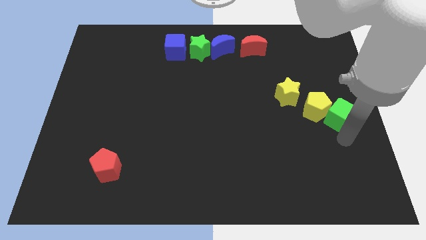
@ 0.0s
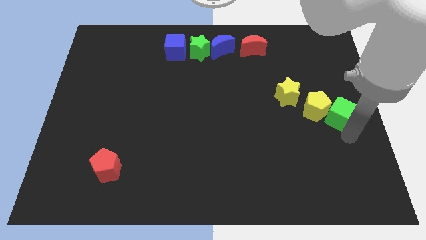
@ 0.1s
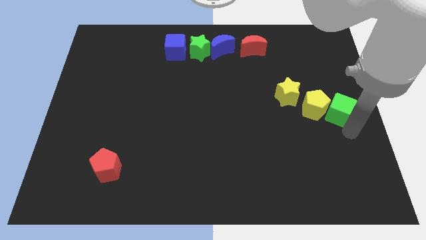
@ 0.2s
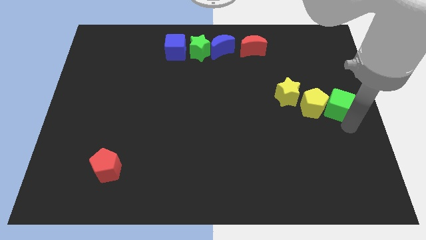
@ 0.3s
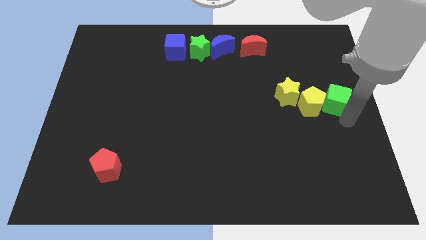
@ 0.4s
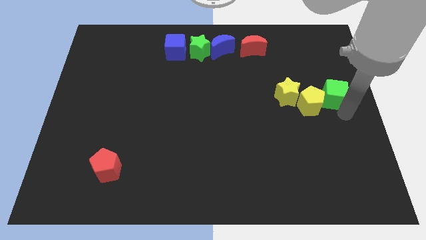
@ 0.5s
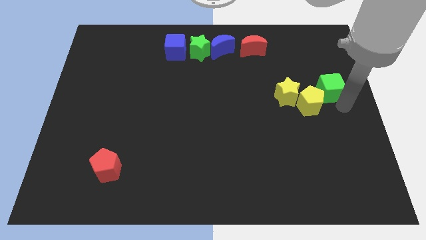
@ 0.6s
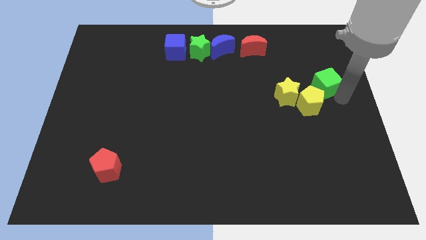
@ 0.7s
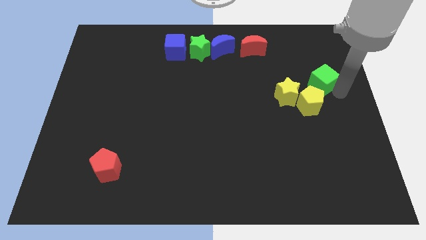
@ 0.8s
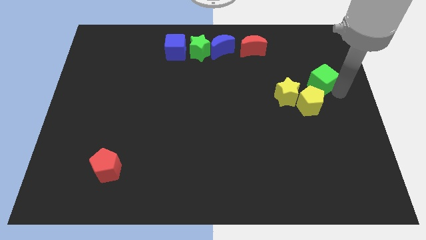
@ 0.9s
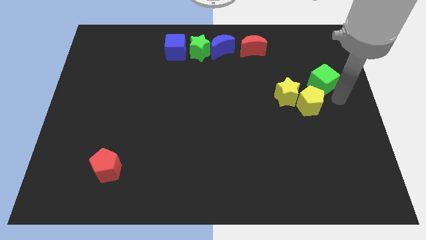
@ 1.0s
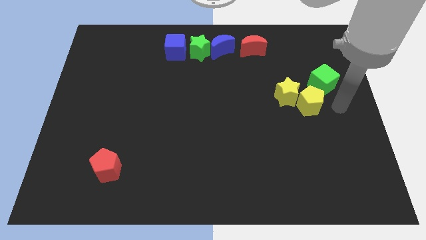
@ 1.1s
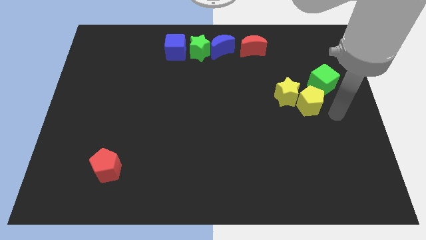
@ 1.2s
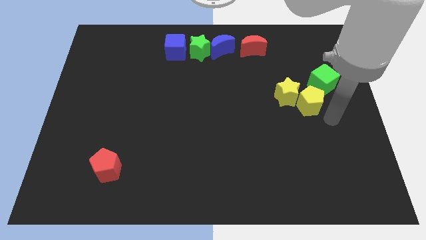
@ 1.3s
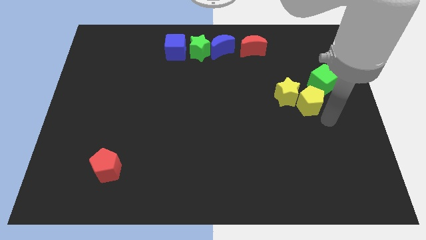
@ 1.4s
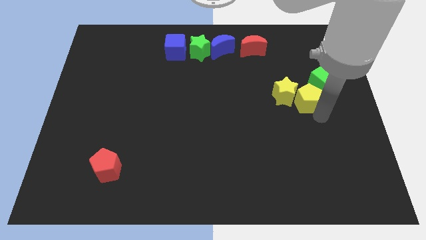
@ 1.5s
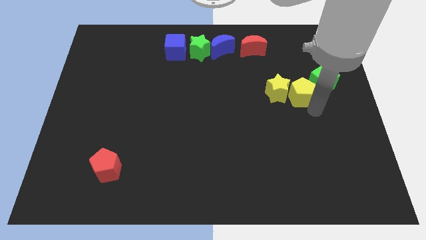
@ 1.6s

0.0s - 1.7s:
move the green cube towards top

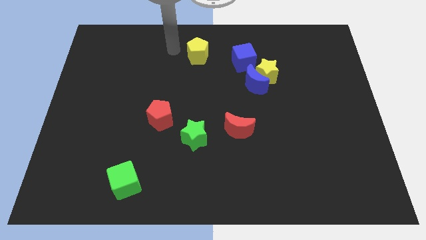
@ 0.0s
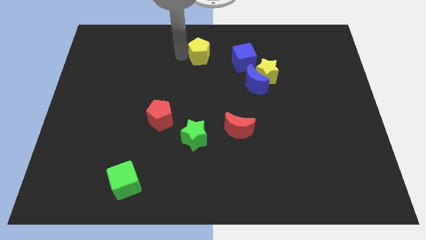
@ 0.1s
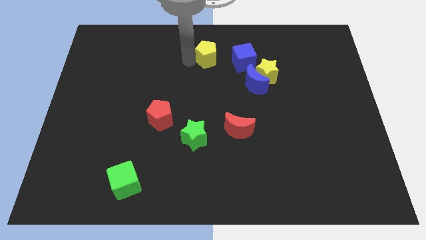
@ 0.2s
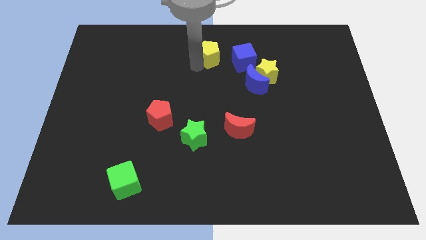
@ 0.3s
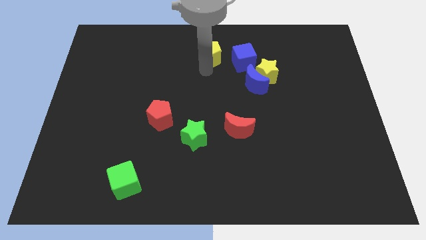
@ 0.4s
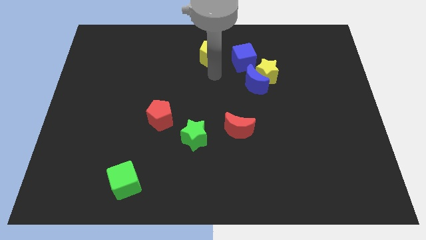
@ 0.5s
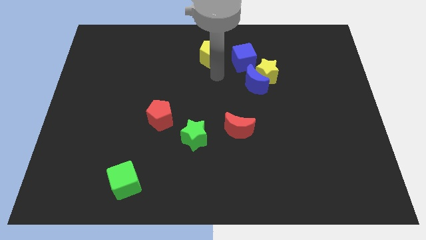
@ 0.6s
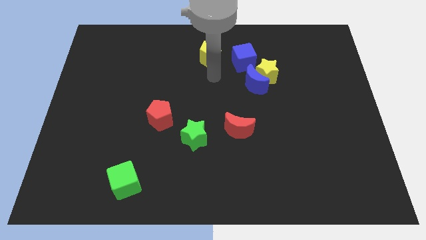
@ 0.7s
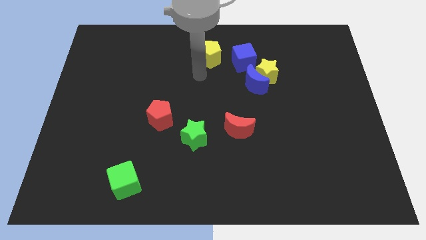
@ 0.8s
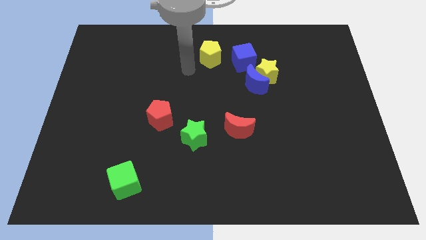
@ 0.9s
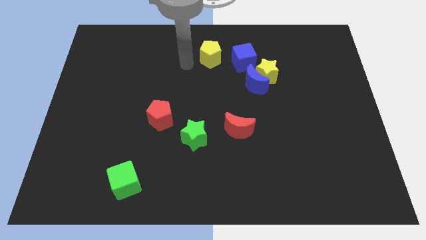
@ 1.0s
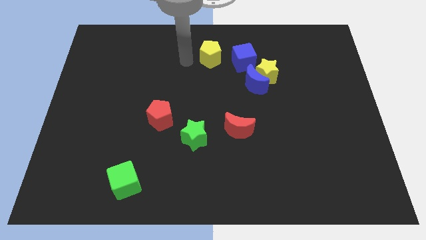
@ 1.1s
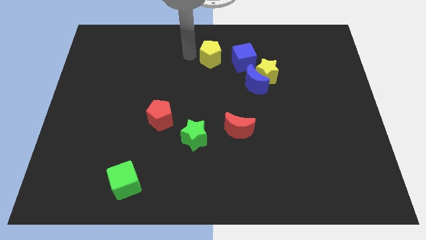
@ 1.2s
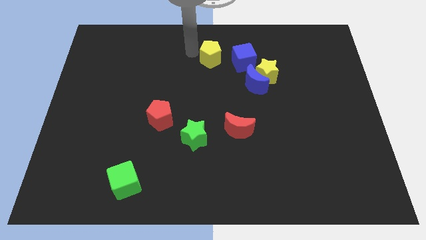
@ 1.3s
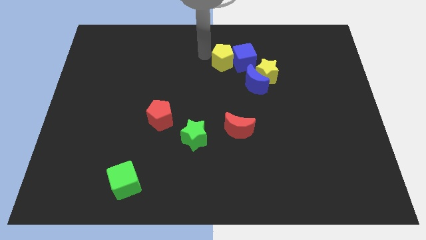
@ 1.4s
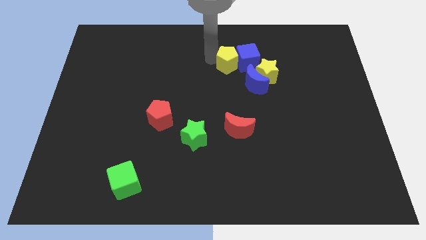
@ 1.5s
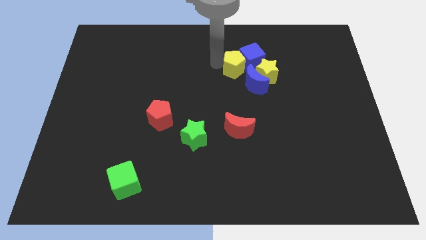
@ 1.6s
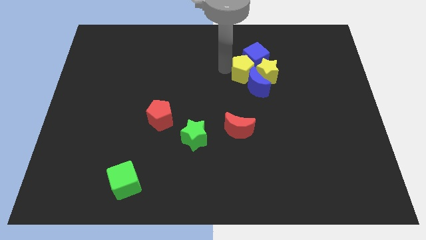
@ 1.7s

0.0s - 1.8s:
move the yellow pentagon left to the blue cube

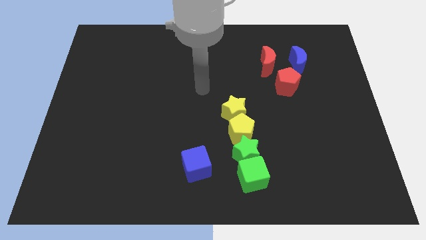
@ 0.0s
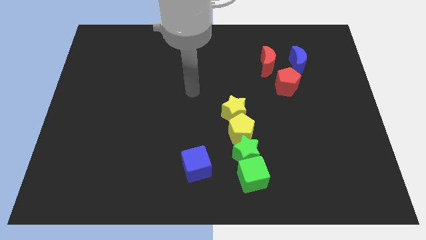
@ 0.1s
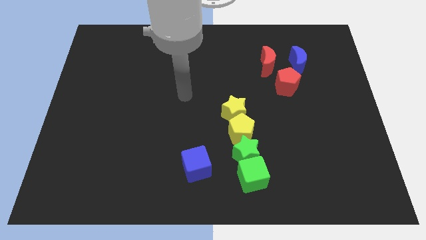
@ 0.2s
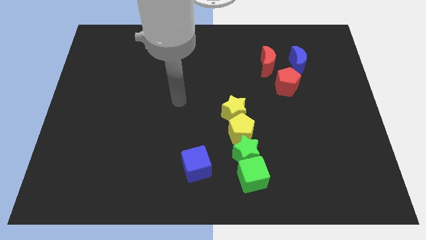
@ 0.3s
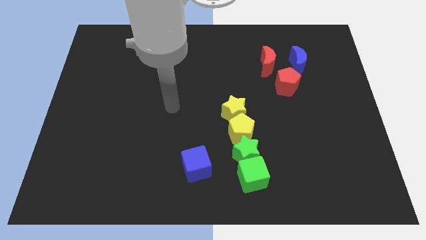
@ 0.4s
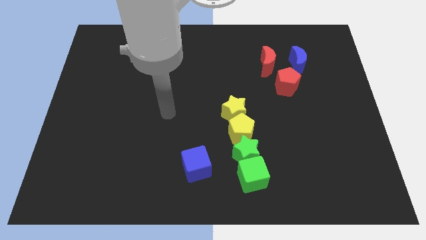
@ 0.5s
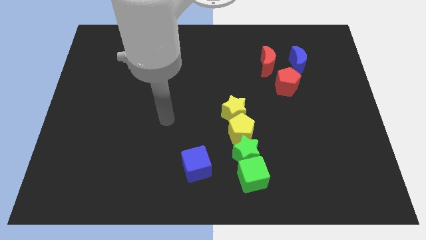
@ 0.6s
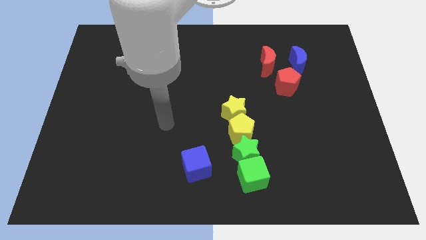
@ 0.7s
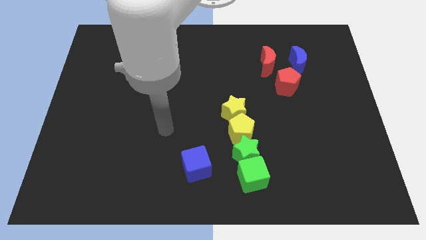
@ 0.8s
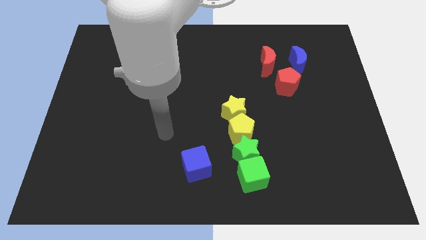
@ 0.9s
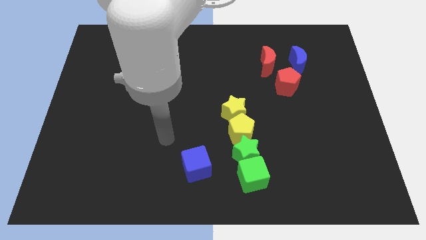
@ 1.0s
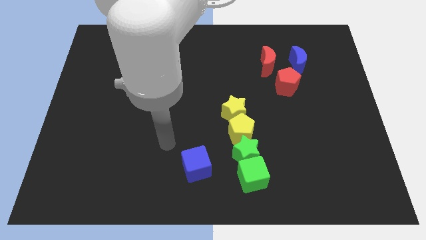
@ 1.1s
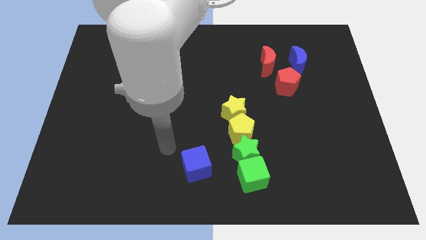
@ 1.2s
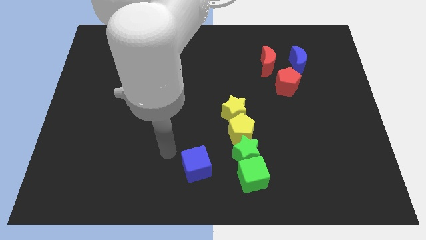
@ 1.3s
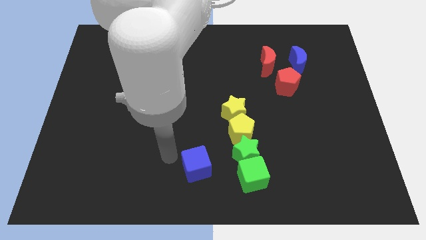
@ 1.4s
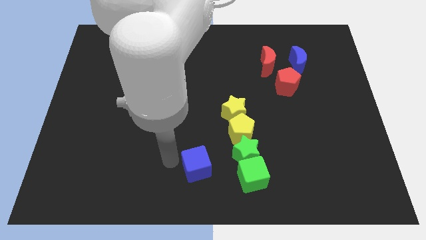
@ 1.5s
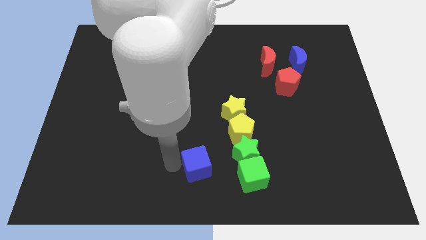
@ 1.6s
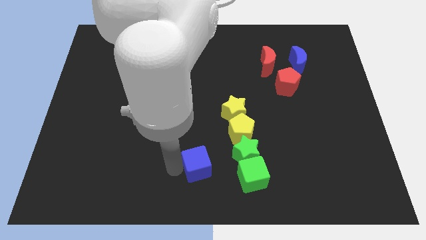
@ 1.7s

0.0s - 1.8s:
place your arm arm to the left of the blue cube

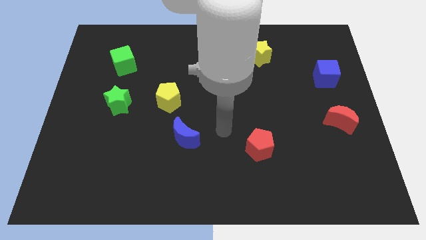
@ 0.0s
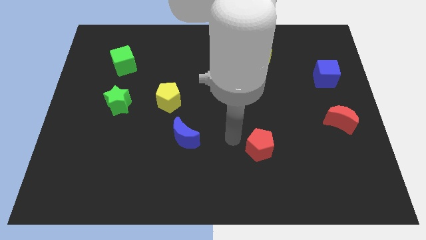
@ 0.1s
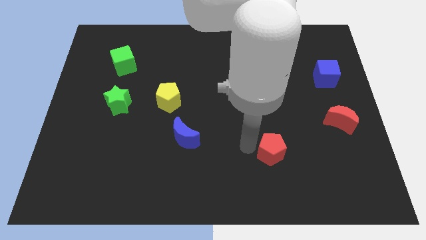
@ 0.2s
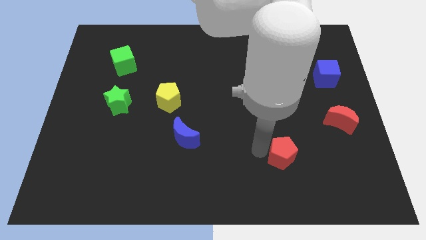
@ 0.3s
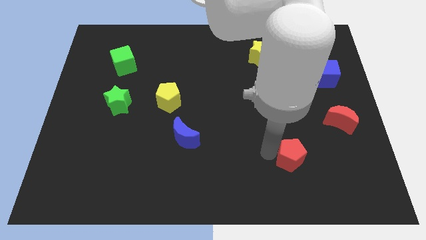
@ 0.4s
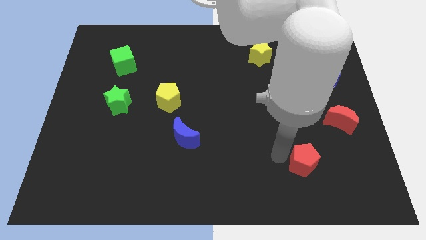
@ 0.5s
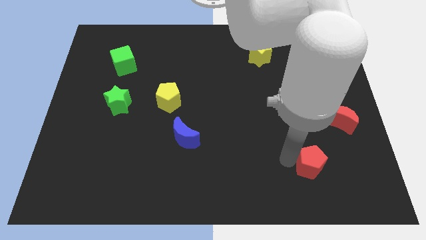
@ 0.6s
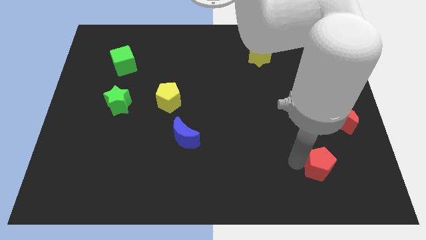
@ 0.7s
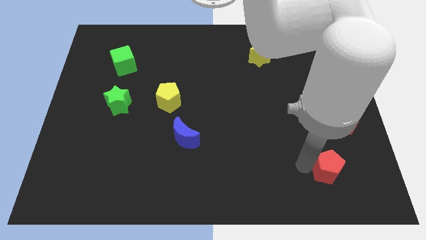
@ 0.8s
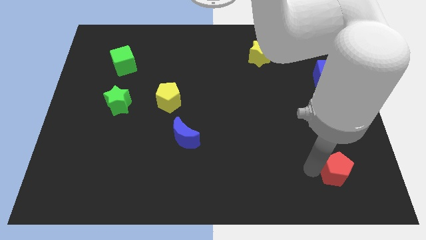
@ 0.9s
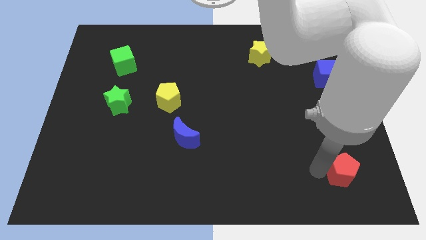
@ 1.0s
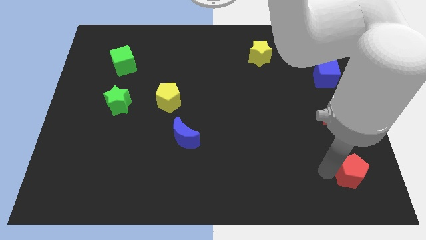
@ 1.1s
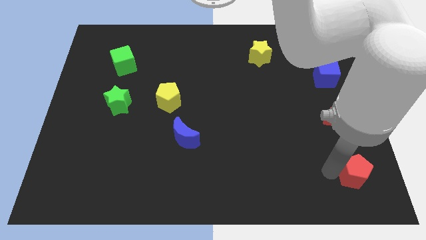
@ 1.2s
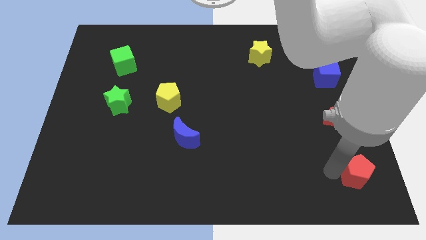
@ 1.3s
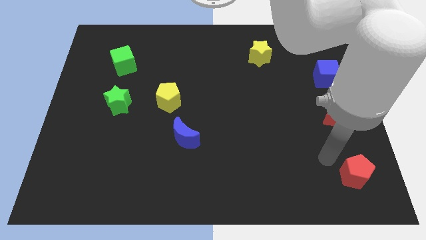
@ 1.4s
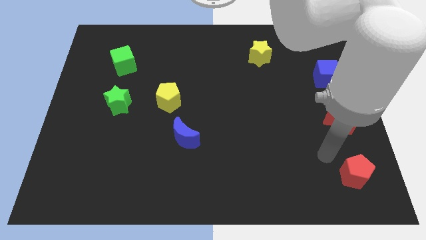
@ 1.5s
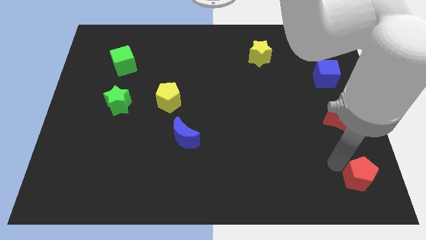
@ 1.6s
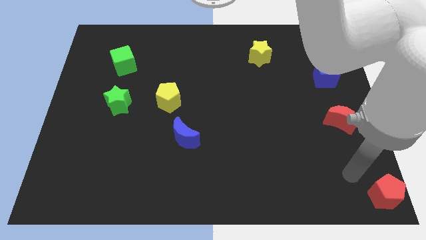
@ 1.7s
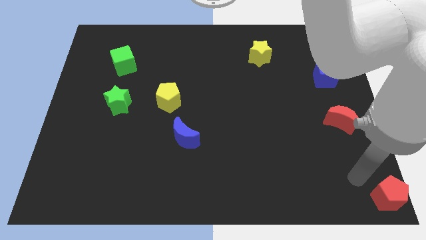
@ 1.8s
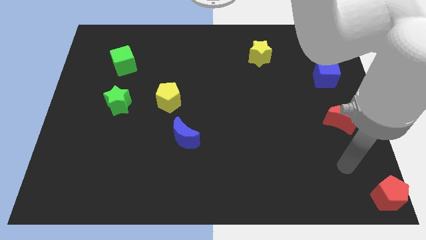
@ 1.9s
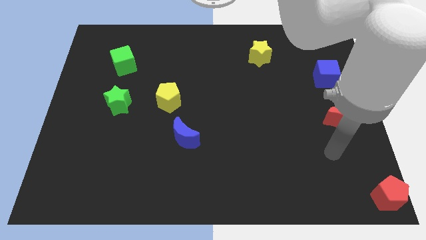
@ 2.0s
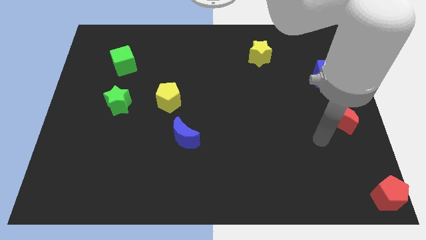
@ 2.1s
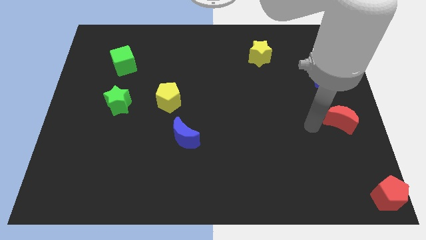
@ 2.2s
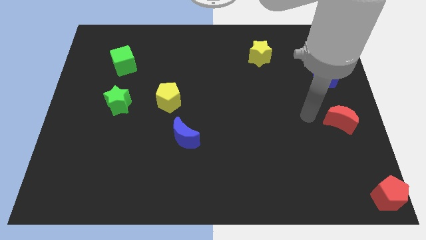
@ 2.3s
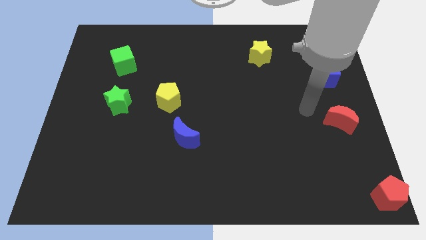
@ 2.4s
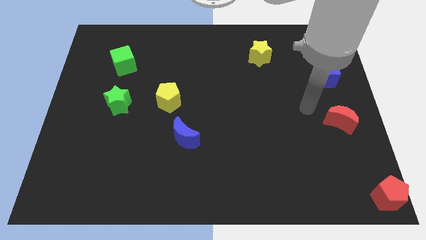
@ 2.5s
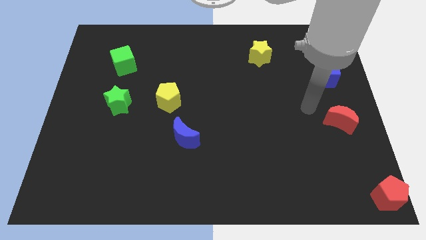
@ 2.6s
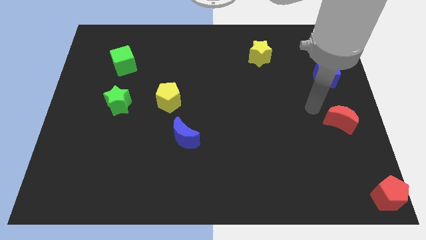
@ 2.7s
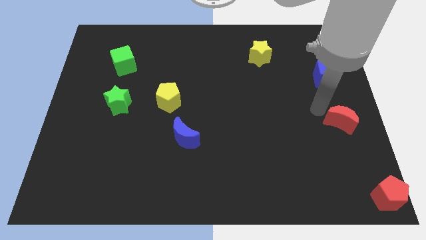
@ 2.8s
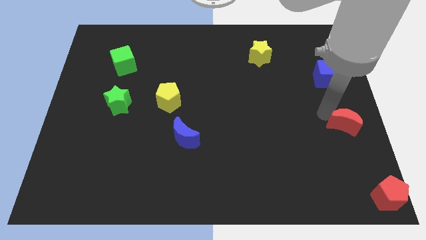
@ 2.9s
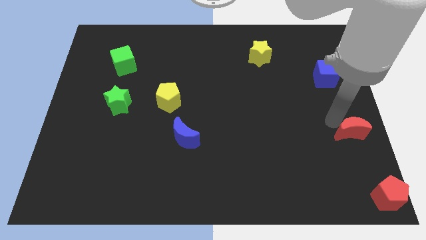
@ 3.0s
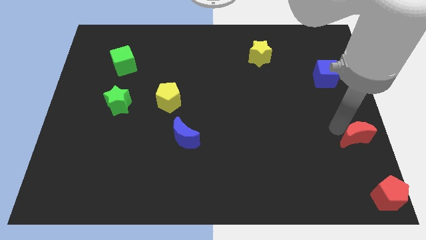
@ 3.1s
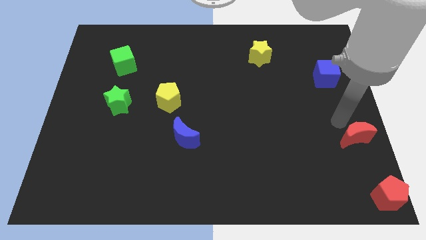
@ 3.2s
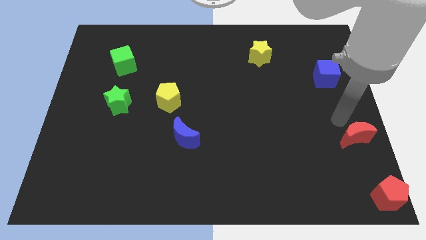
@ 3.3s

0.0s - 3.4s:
move the red moon to the top side of the red pentagon

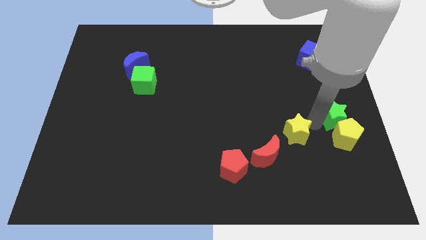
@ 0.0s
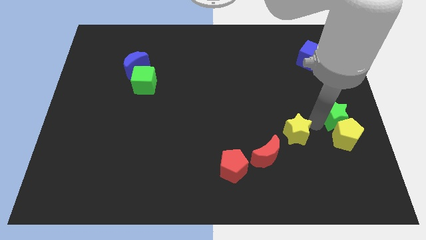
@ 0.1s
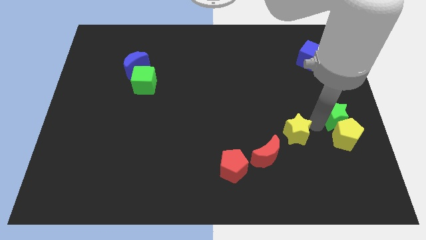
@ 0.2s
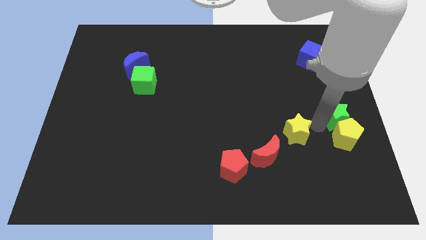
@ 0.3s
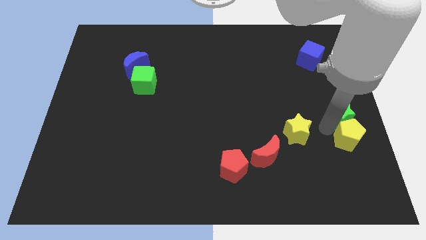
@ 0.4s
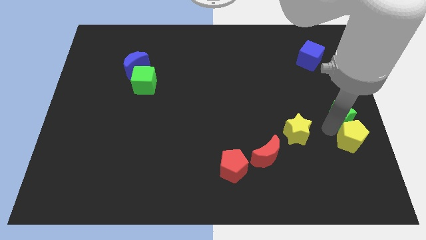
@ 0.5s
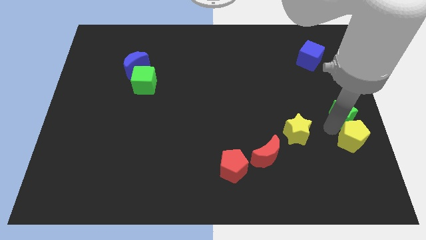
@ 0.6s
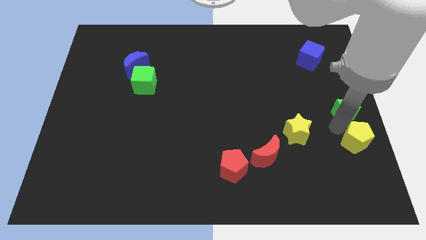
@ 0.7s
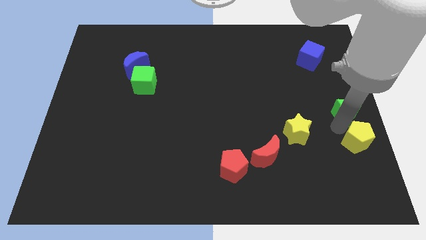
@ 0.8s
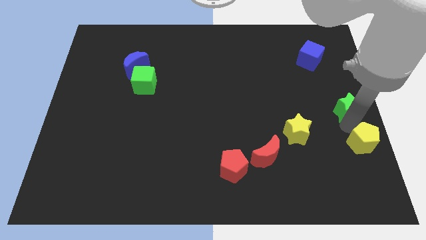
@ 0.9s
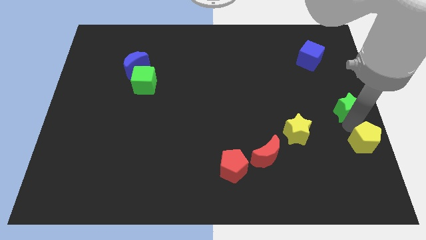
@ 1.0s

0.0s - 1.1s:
put green star above yellow pentagon
